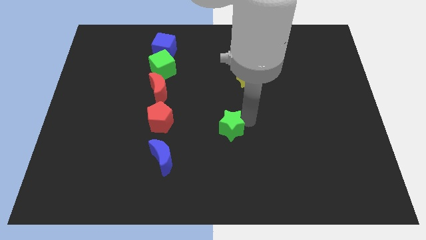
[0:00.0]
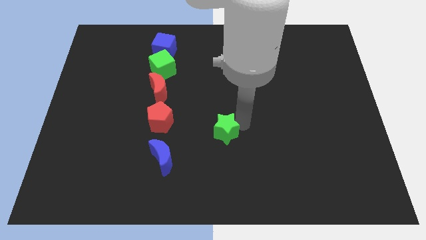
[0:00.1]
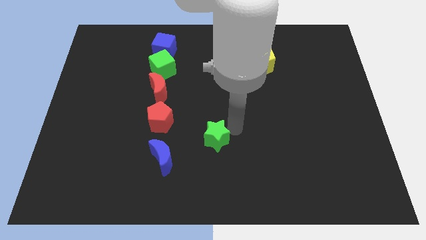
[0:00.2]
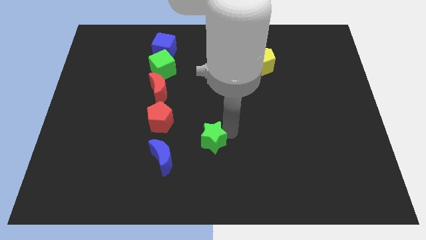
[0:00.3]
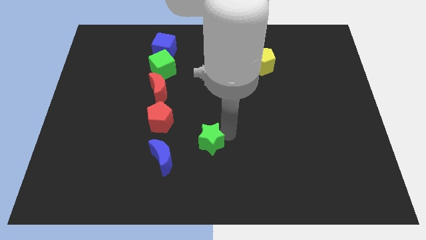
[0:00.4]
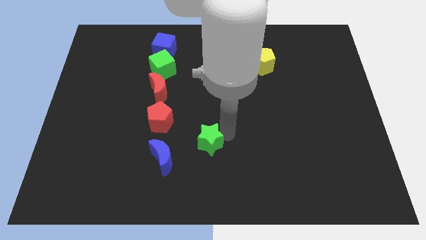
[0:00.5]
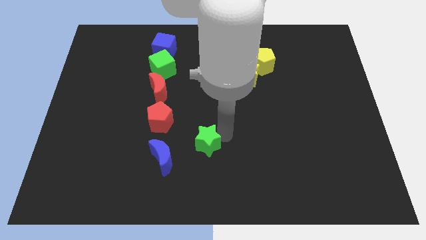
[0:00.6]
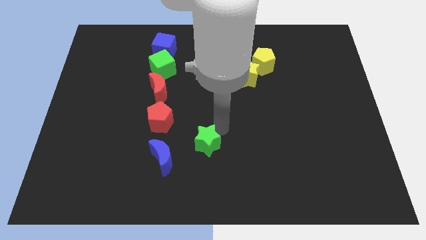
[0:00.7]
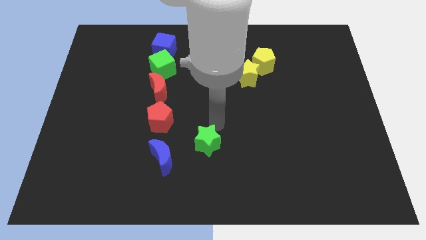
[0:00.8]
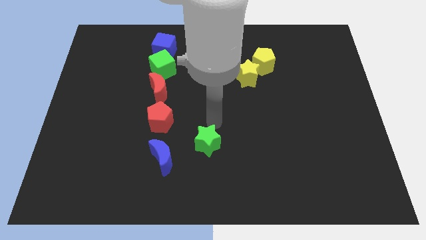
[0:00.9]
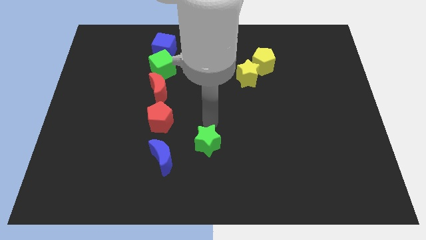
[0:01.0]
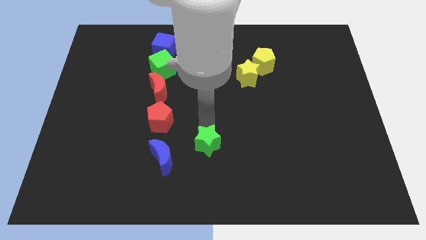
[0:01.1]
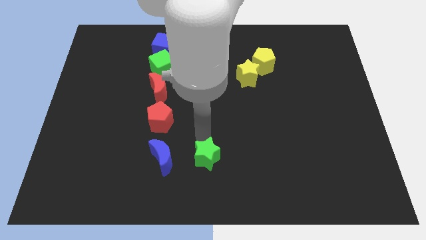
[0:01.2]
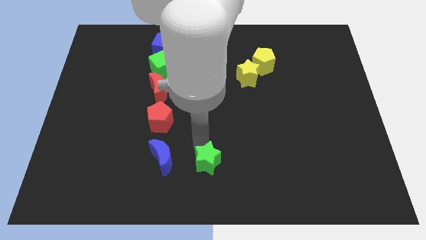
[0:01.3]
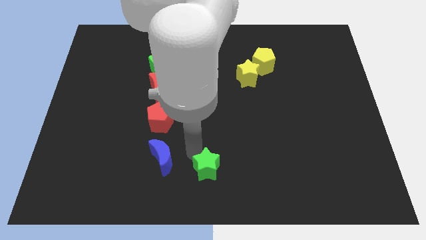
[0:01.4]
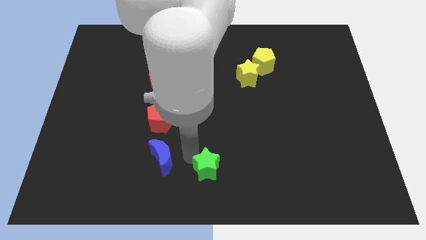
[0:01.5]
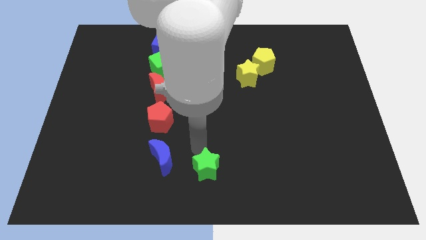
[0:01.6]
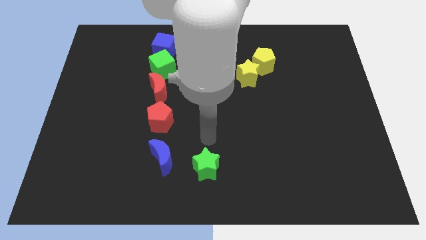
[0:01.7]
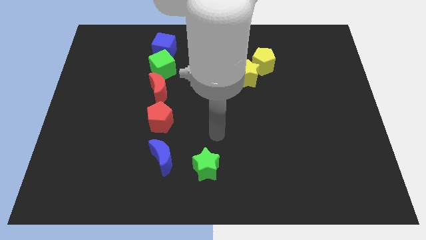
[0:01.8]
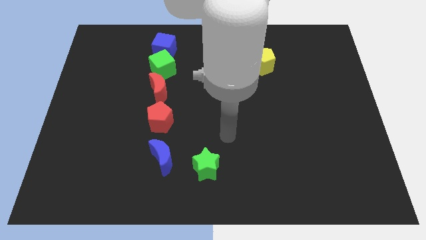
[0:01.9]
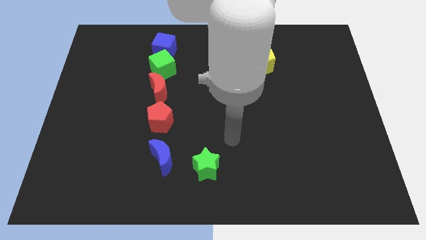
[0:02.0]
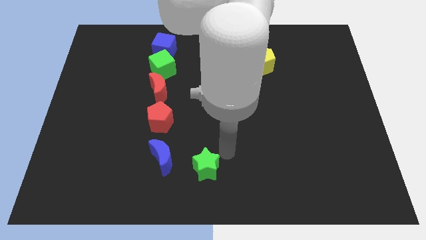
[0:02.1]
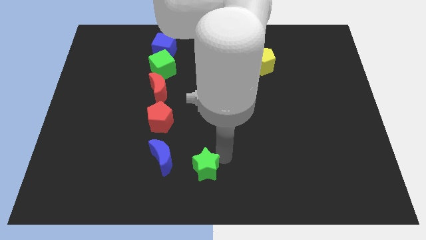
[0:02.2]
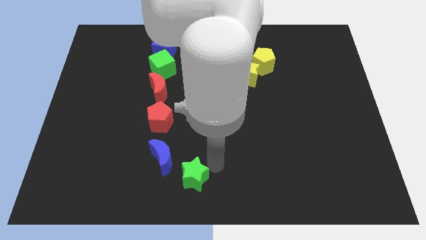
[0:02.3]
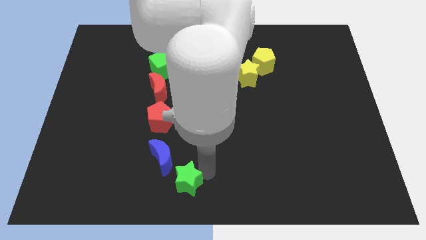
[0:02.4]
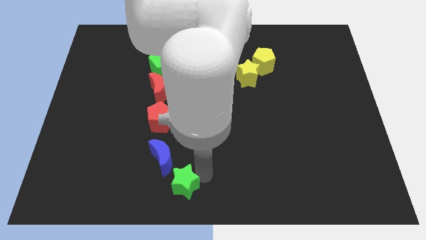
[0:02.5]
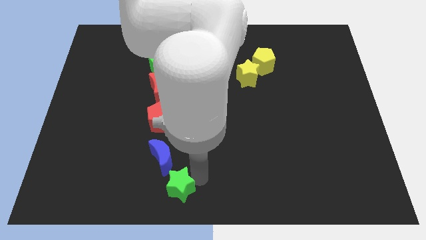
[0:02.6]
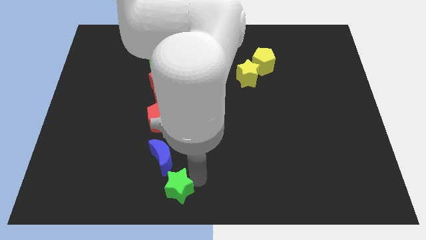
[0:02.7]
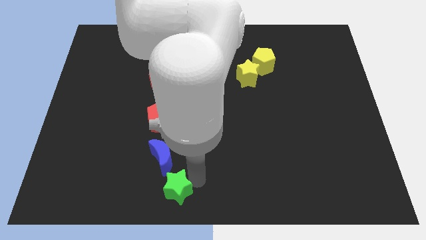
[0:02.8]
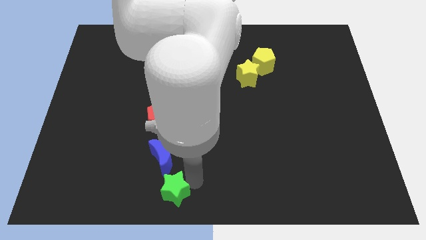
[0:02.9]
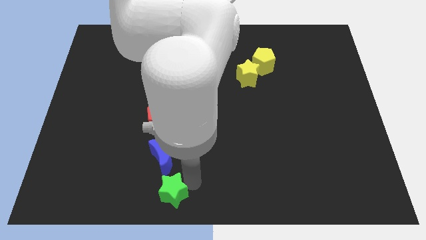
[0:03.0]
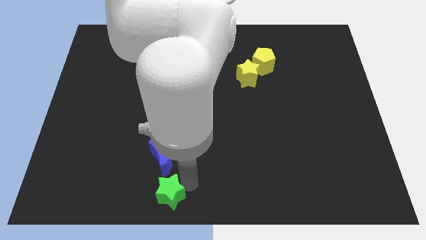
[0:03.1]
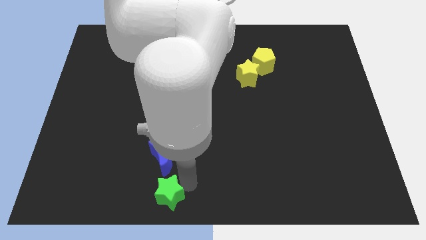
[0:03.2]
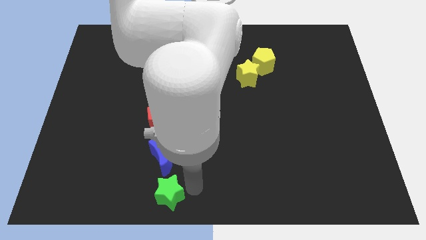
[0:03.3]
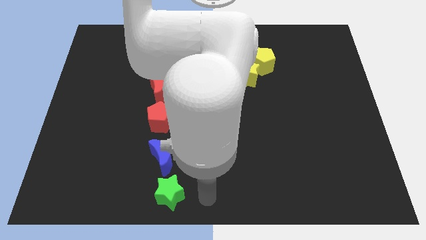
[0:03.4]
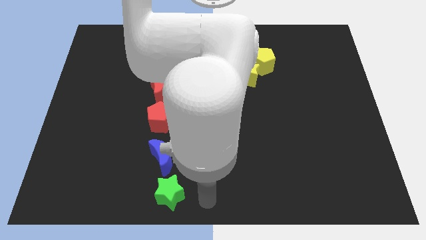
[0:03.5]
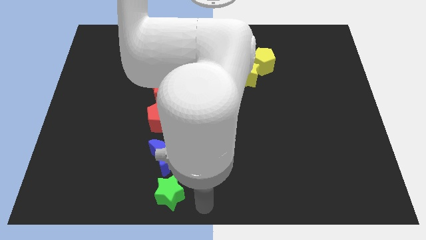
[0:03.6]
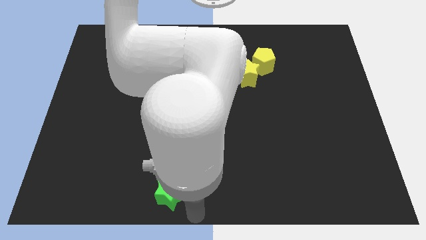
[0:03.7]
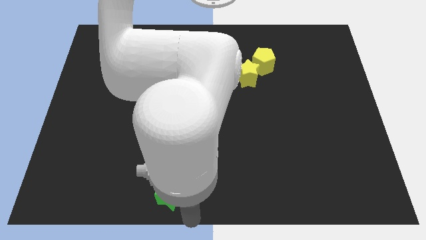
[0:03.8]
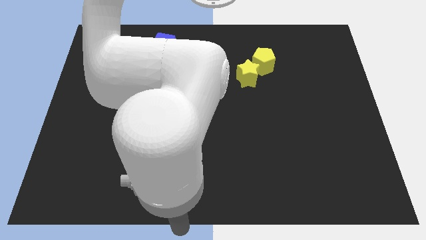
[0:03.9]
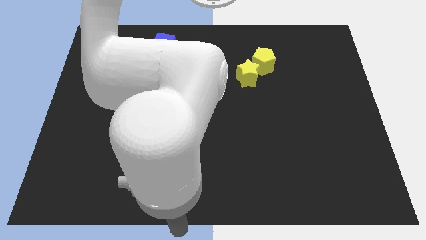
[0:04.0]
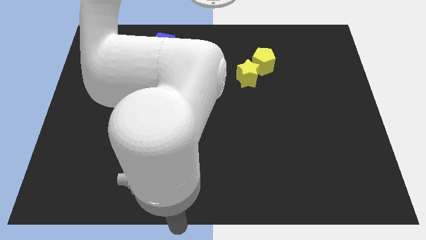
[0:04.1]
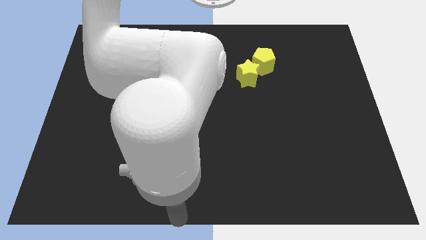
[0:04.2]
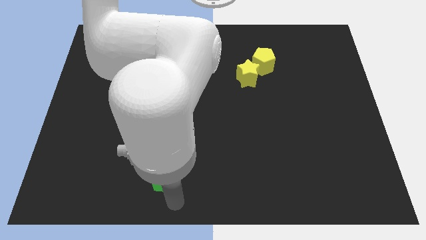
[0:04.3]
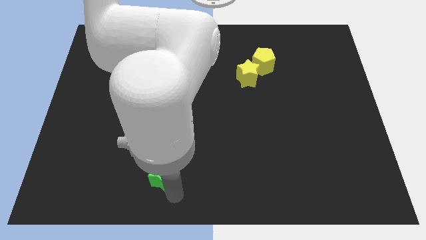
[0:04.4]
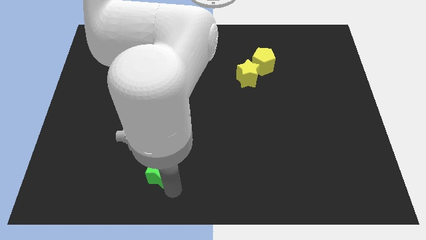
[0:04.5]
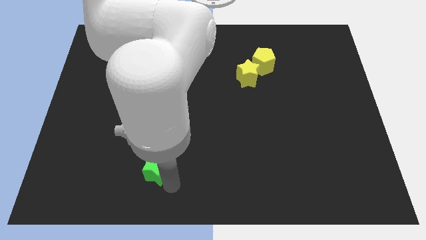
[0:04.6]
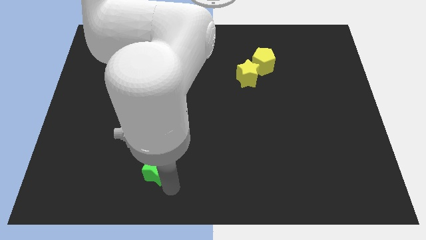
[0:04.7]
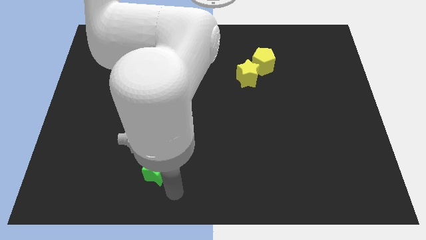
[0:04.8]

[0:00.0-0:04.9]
move the green star into the bottom side of the blue moon

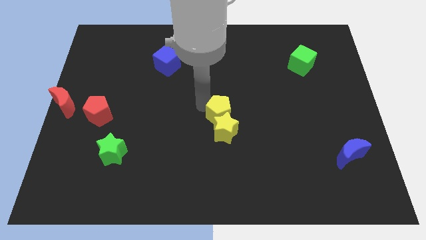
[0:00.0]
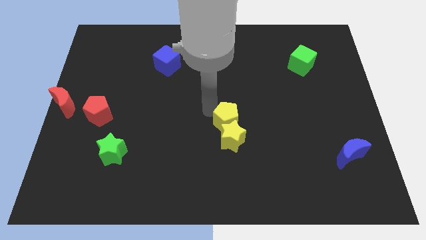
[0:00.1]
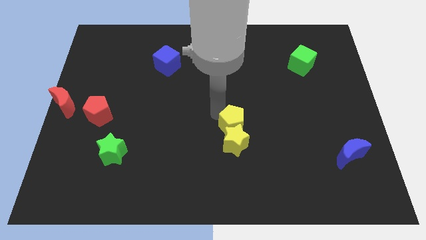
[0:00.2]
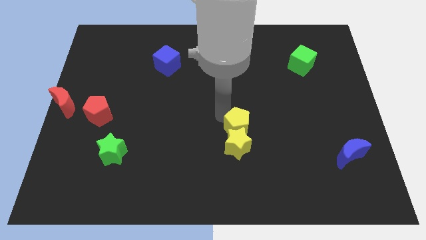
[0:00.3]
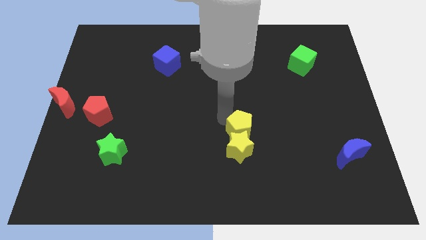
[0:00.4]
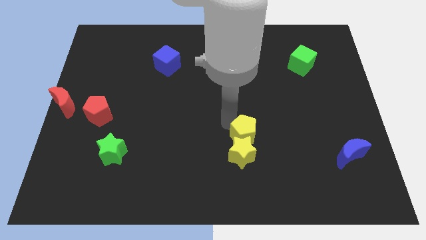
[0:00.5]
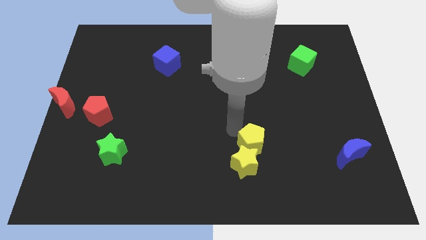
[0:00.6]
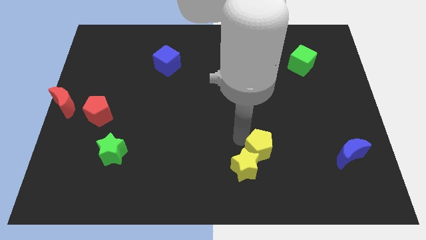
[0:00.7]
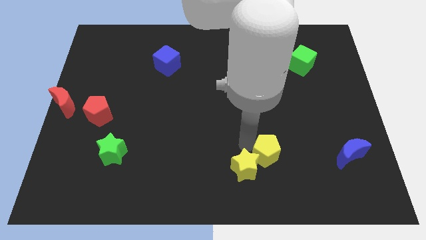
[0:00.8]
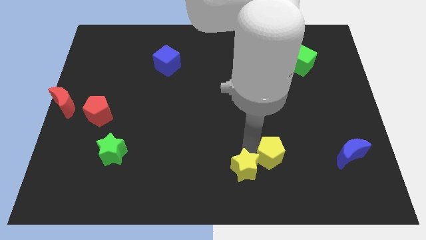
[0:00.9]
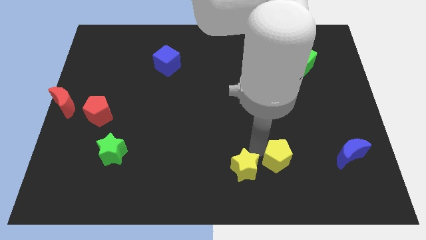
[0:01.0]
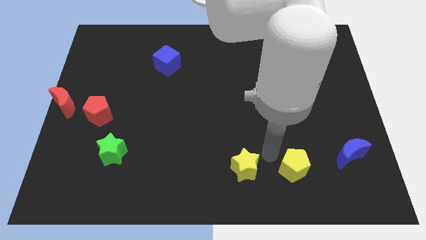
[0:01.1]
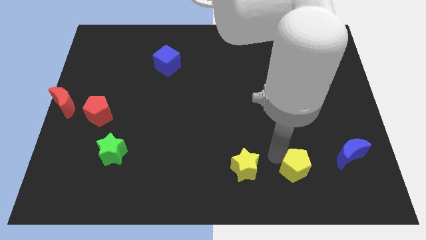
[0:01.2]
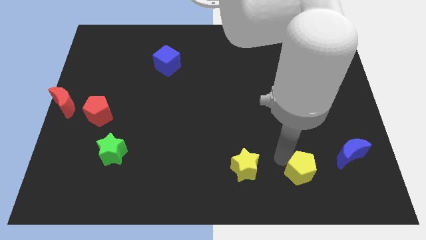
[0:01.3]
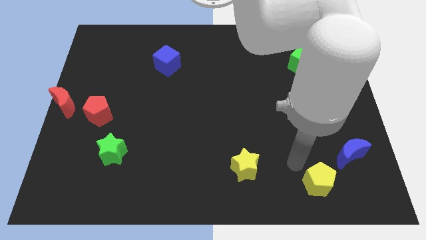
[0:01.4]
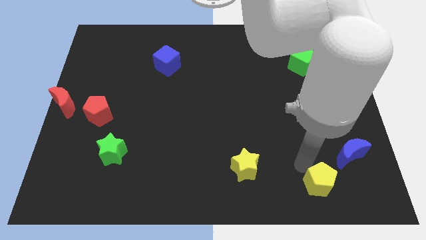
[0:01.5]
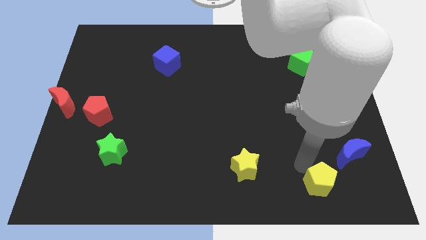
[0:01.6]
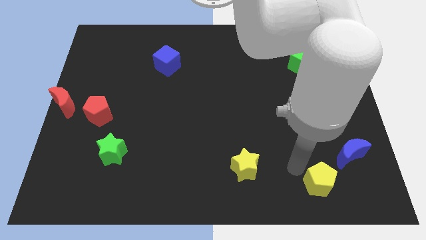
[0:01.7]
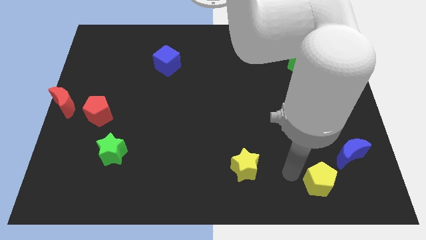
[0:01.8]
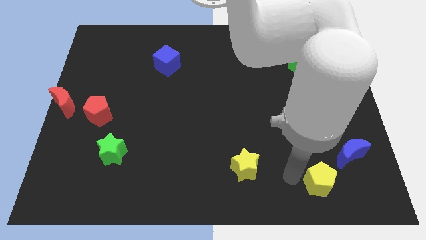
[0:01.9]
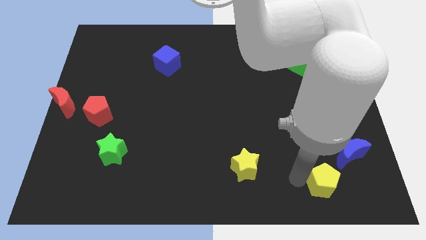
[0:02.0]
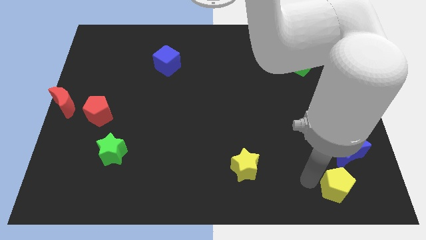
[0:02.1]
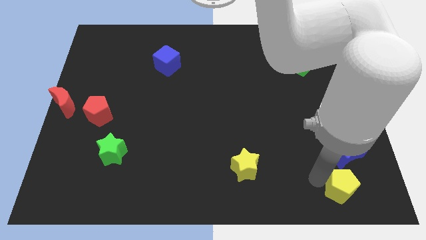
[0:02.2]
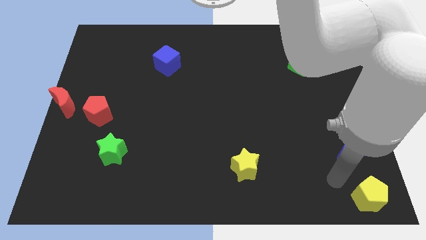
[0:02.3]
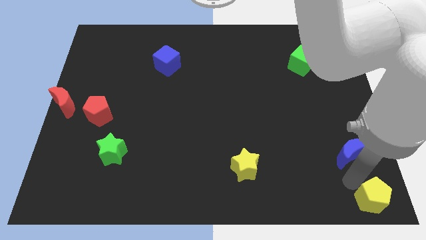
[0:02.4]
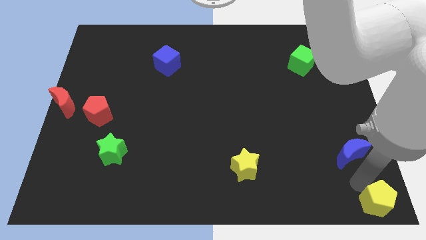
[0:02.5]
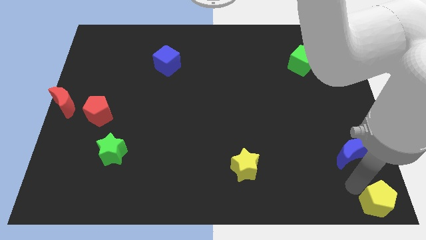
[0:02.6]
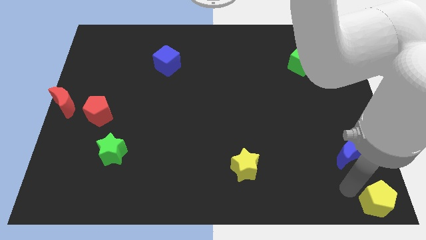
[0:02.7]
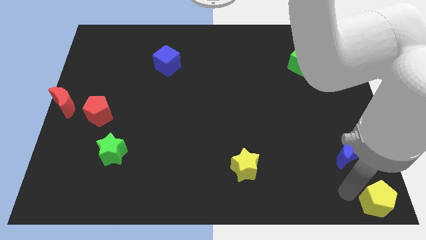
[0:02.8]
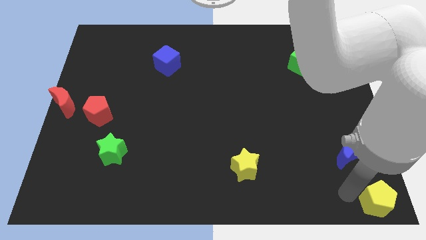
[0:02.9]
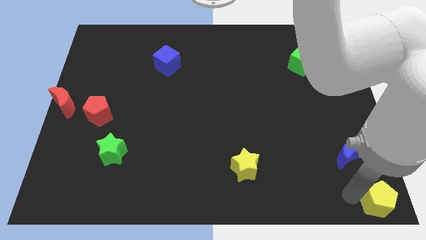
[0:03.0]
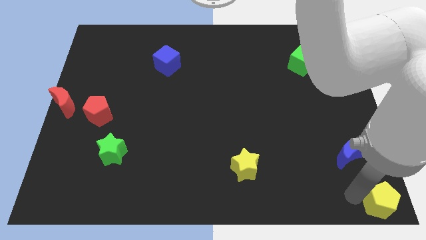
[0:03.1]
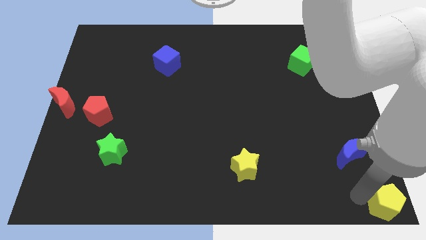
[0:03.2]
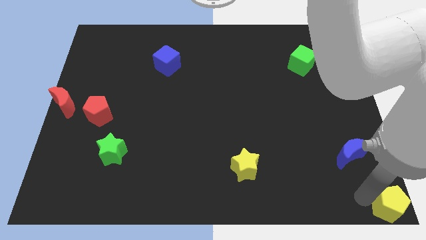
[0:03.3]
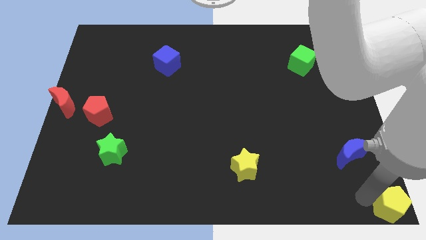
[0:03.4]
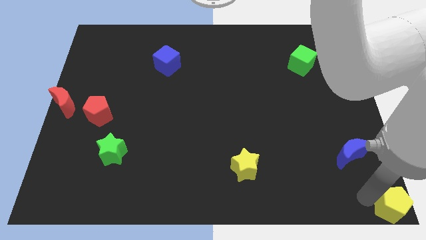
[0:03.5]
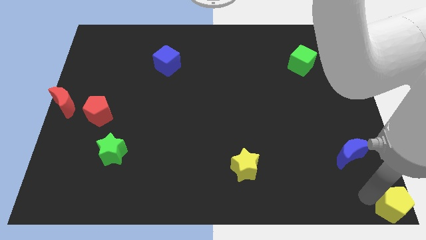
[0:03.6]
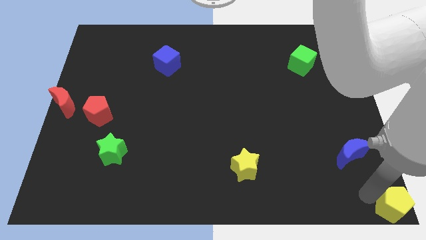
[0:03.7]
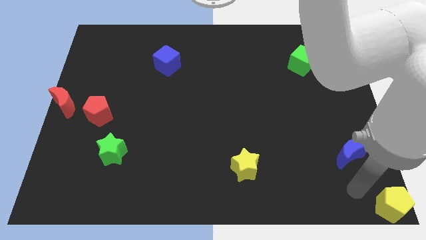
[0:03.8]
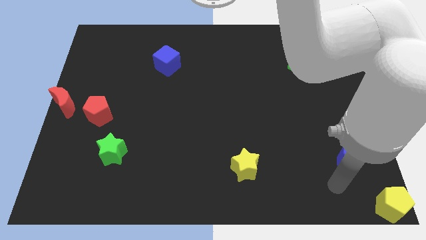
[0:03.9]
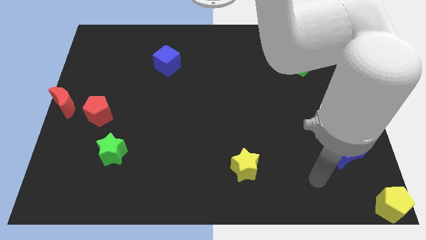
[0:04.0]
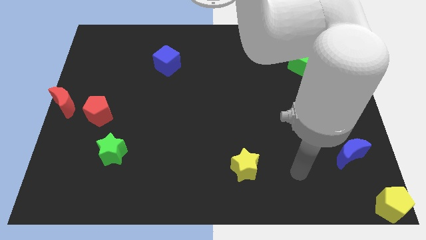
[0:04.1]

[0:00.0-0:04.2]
move yellow pentagon to the bottom right corner of the board
